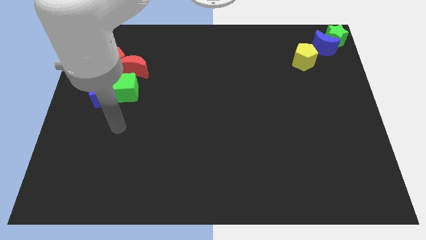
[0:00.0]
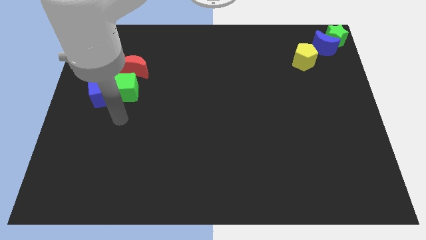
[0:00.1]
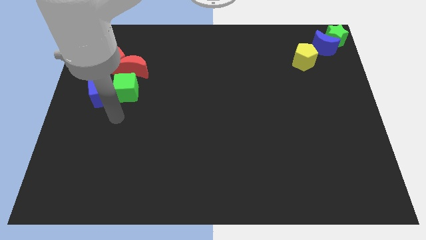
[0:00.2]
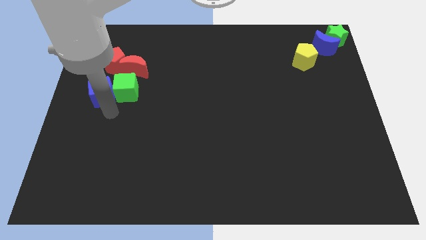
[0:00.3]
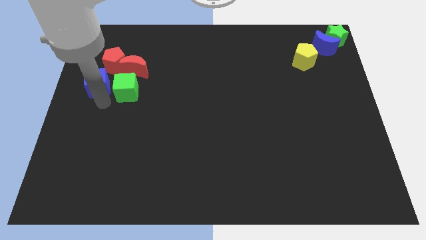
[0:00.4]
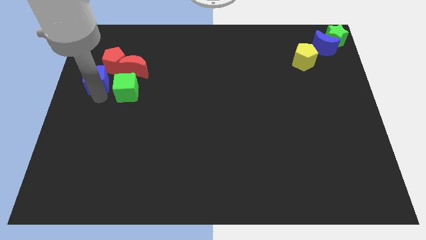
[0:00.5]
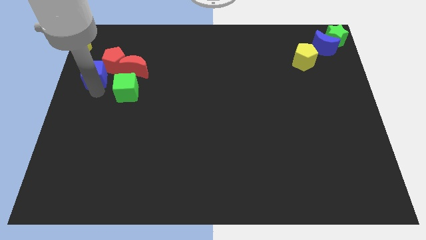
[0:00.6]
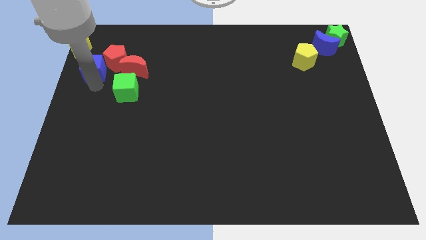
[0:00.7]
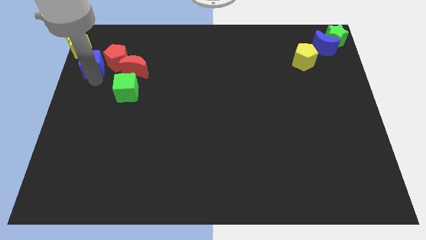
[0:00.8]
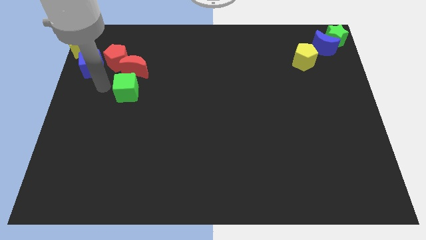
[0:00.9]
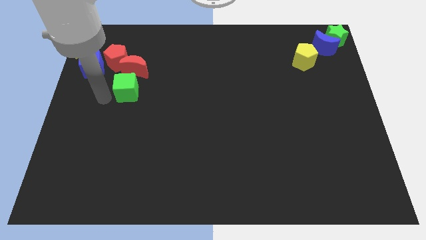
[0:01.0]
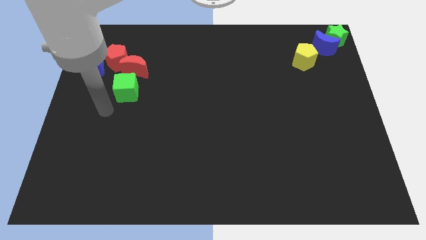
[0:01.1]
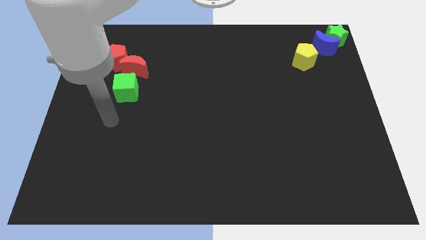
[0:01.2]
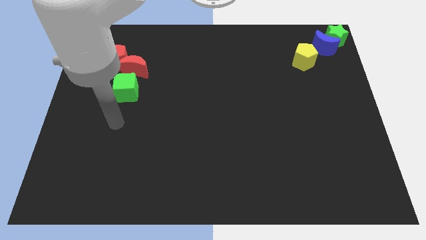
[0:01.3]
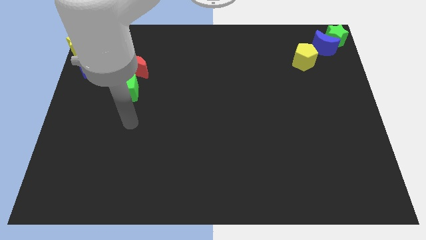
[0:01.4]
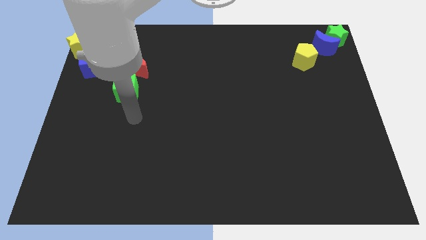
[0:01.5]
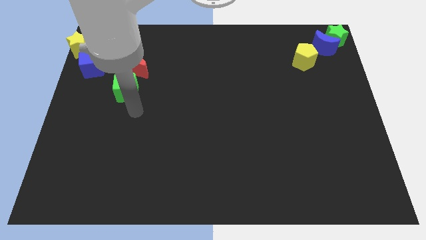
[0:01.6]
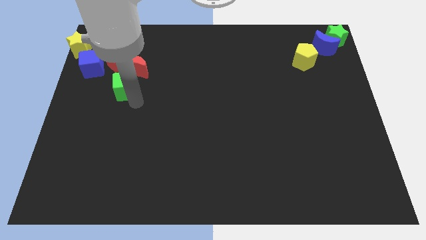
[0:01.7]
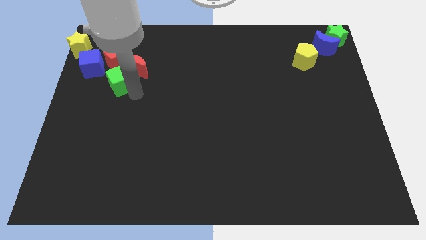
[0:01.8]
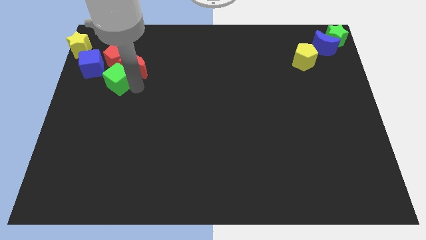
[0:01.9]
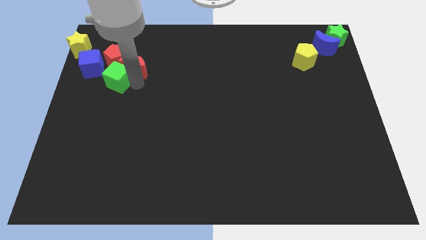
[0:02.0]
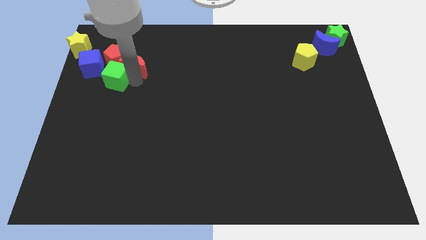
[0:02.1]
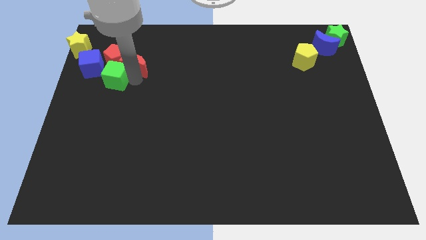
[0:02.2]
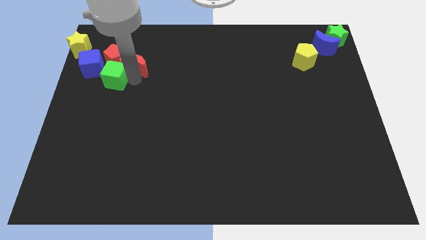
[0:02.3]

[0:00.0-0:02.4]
push a group of blocks to the top left corner of the board

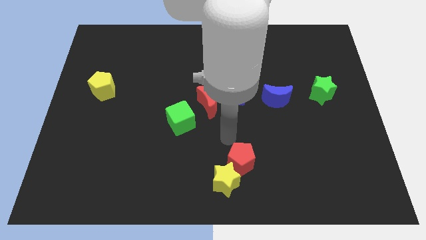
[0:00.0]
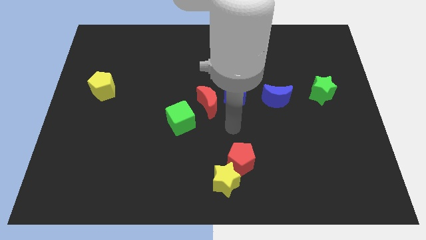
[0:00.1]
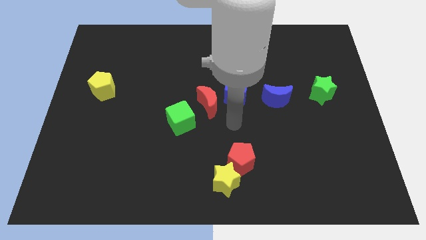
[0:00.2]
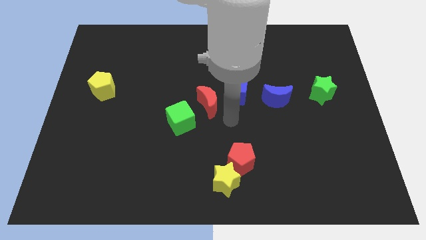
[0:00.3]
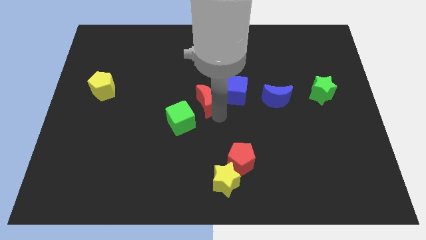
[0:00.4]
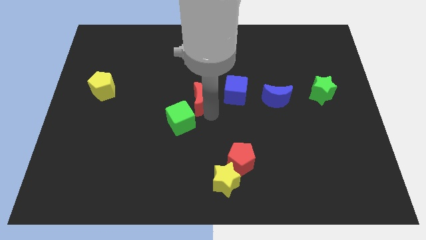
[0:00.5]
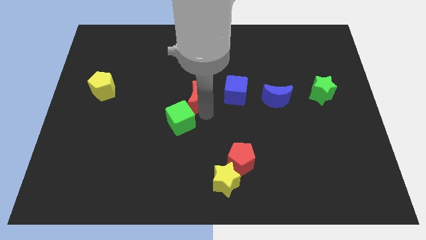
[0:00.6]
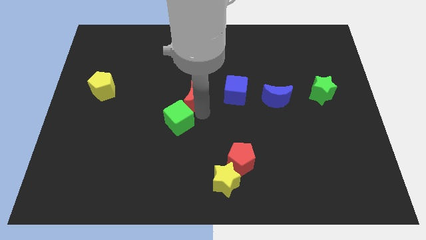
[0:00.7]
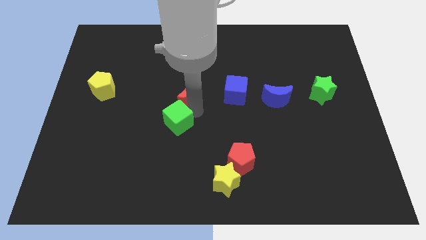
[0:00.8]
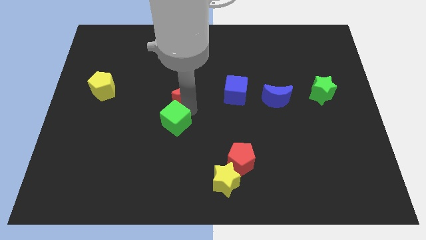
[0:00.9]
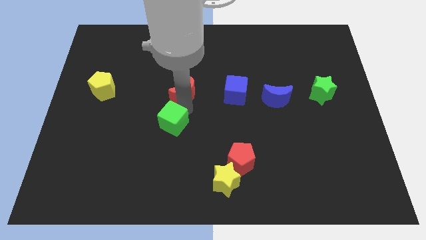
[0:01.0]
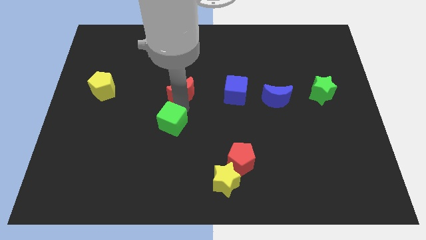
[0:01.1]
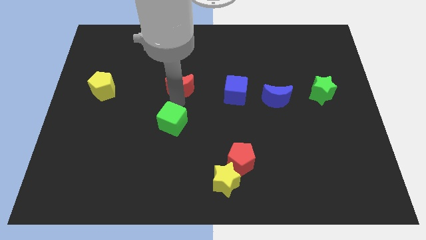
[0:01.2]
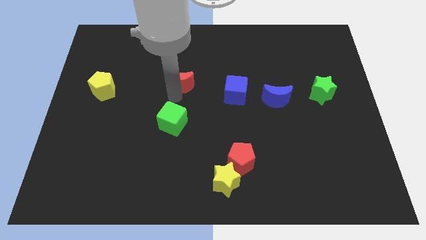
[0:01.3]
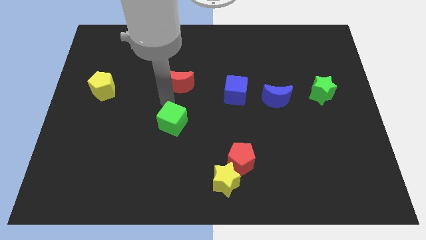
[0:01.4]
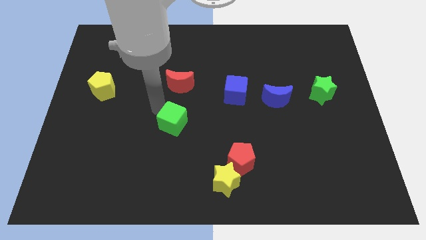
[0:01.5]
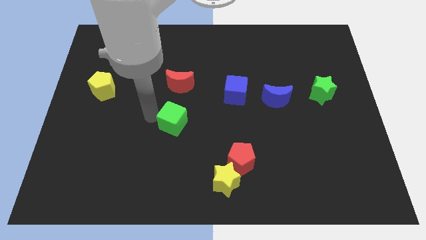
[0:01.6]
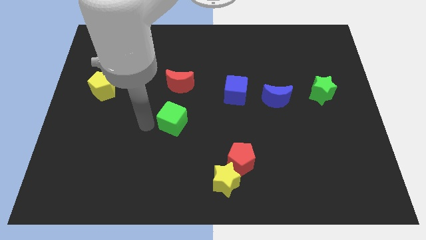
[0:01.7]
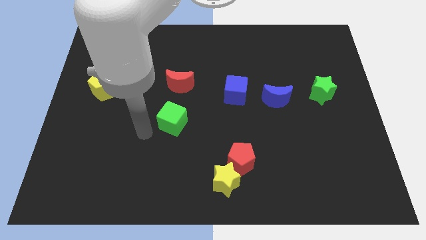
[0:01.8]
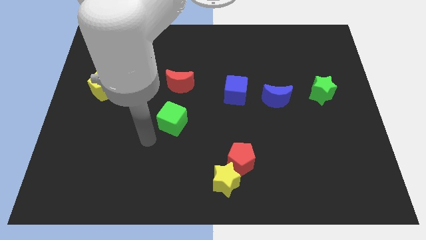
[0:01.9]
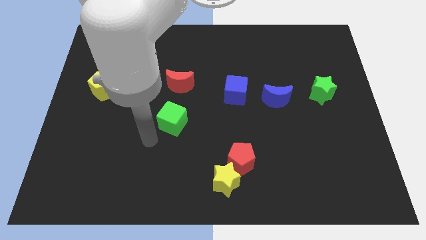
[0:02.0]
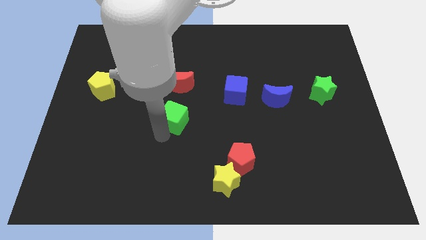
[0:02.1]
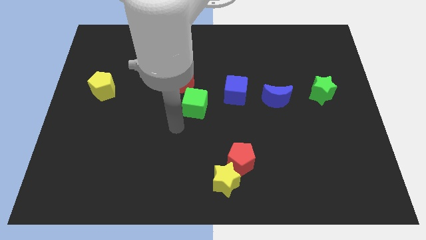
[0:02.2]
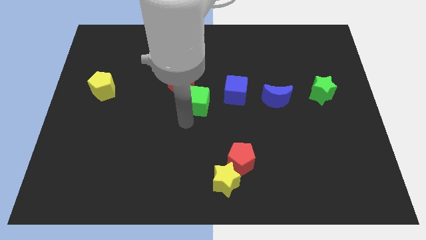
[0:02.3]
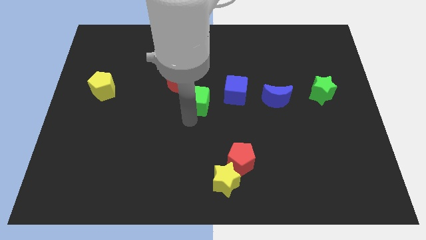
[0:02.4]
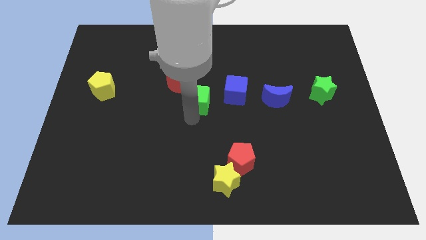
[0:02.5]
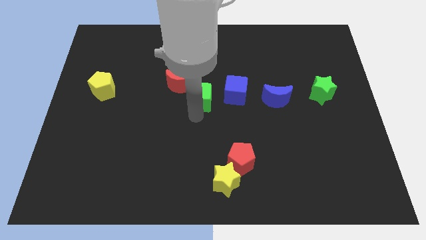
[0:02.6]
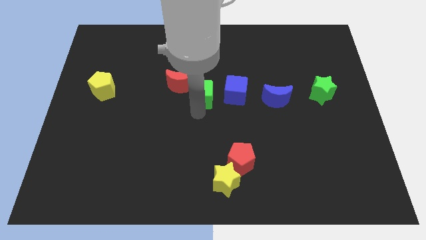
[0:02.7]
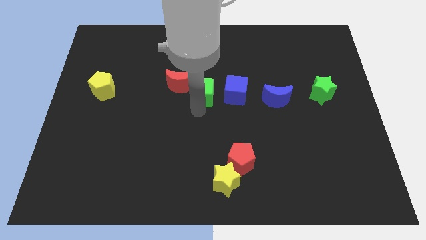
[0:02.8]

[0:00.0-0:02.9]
place the green cube right to the red moon

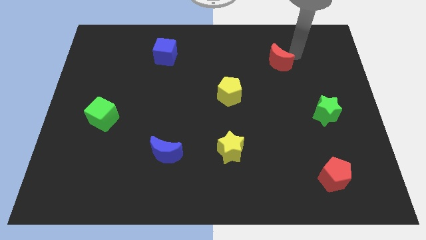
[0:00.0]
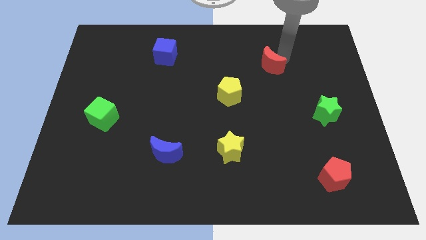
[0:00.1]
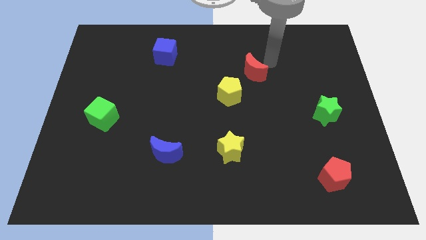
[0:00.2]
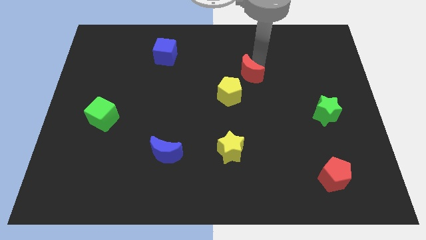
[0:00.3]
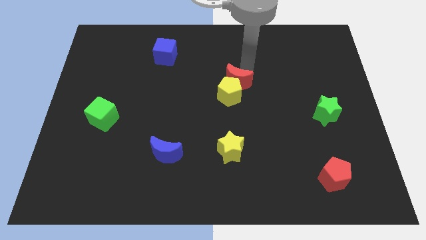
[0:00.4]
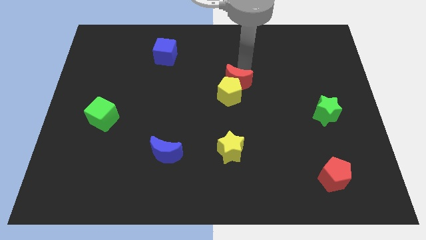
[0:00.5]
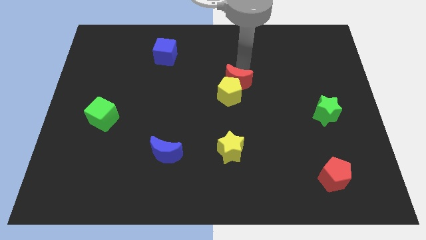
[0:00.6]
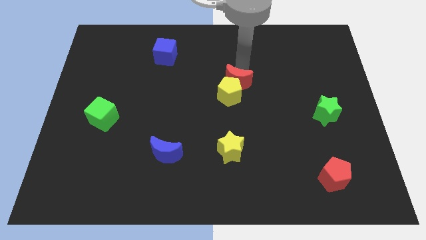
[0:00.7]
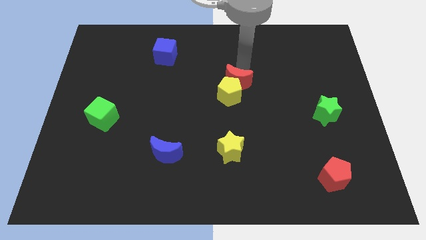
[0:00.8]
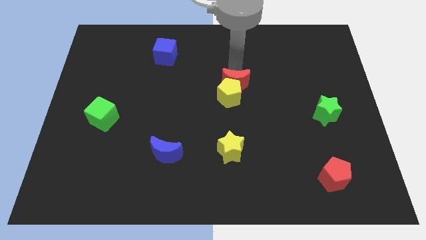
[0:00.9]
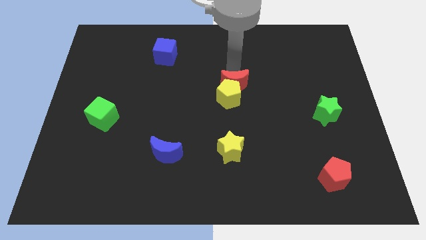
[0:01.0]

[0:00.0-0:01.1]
push the red moon into the yellow pentagon

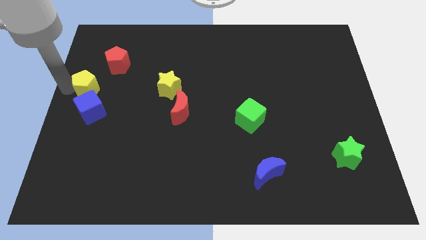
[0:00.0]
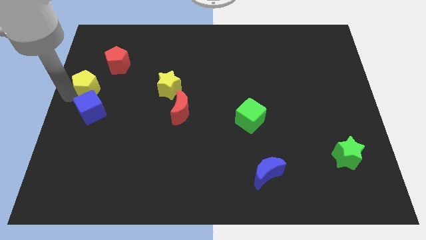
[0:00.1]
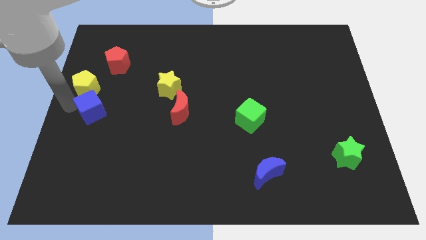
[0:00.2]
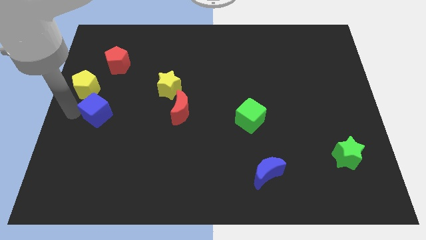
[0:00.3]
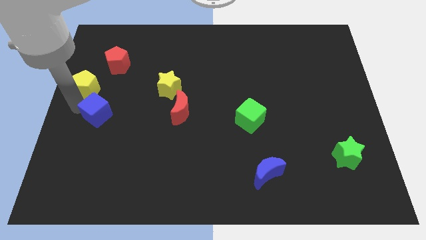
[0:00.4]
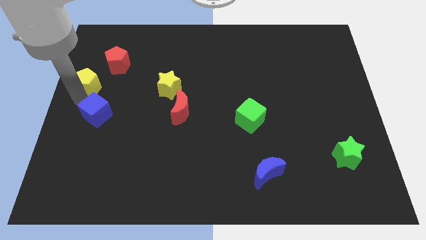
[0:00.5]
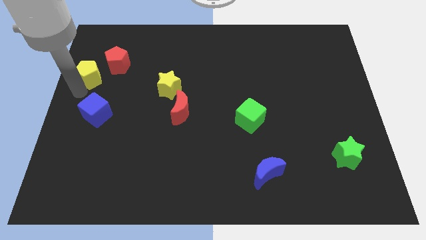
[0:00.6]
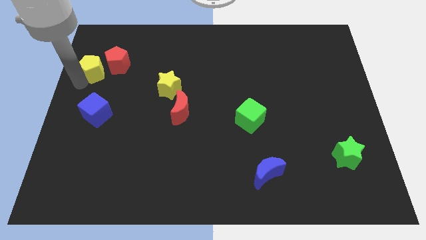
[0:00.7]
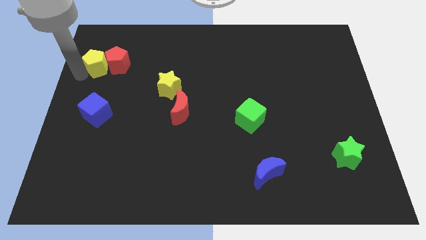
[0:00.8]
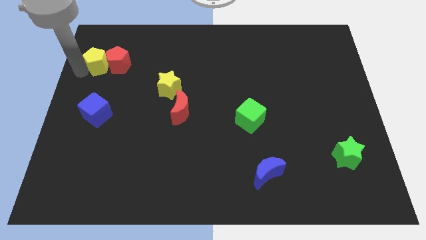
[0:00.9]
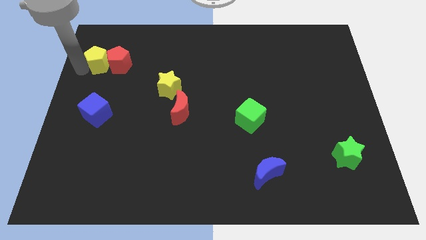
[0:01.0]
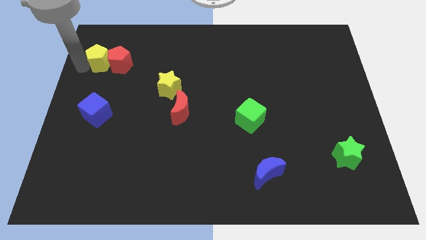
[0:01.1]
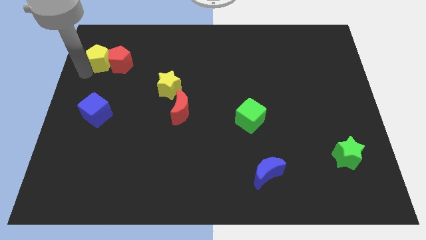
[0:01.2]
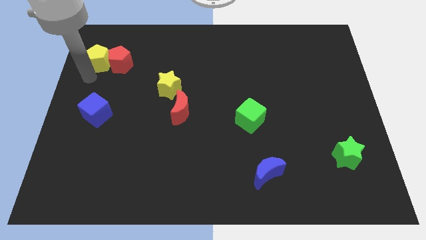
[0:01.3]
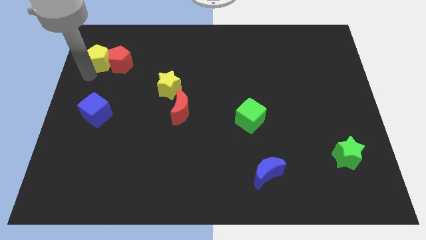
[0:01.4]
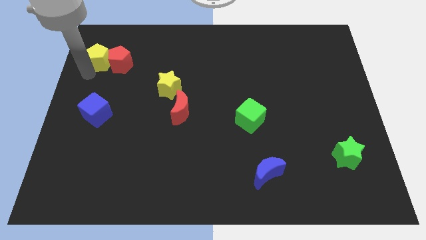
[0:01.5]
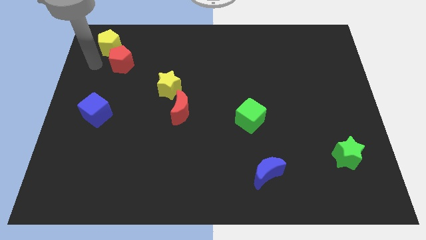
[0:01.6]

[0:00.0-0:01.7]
place yellow pentagon beside red pentagon

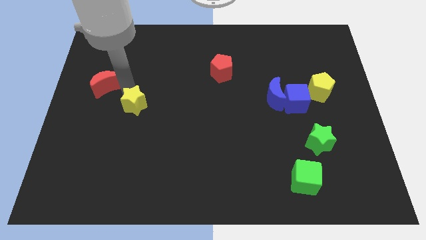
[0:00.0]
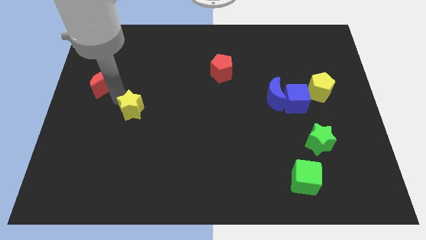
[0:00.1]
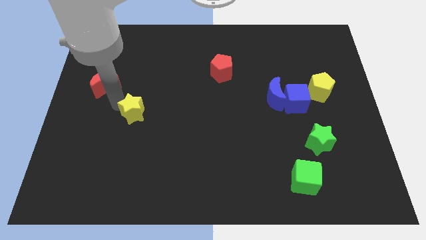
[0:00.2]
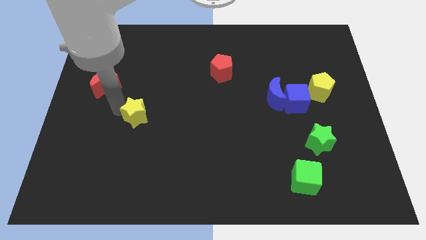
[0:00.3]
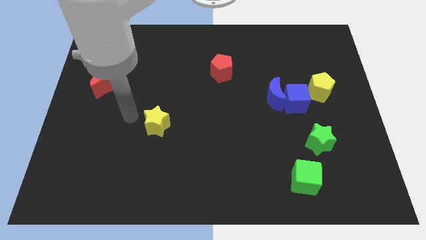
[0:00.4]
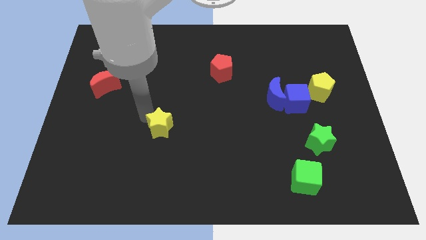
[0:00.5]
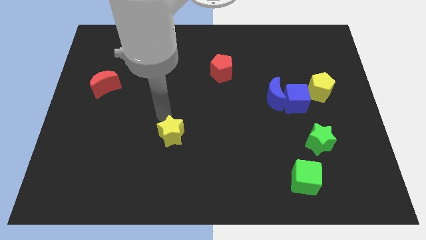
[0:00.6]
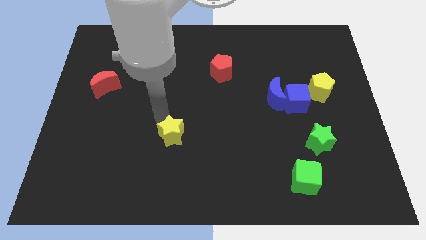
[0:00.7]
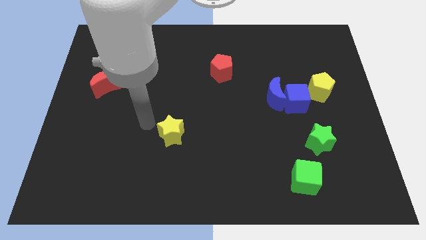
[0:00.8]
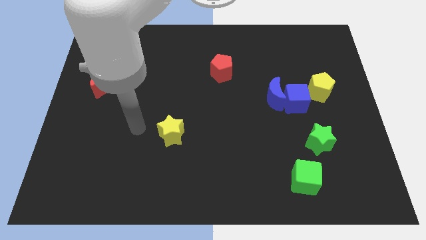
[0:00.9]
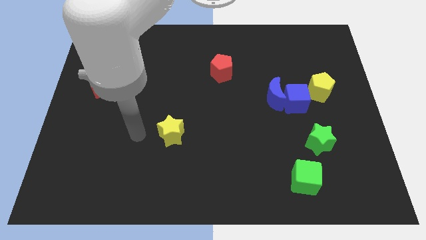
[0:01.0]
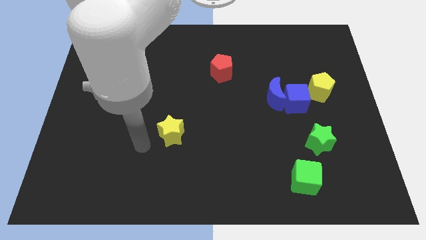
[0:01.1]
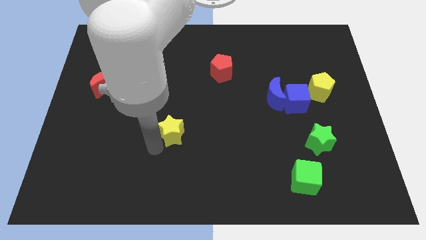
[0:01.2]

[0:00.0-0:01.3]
place the yellow star diagonally bottom right to the red moon
